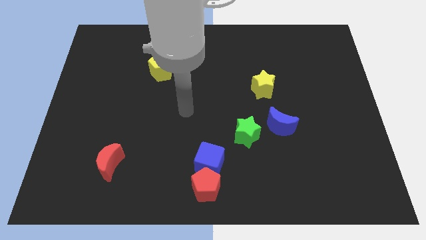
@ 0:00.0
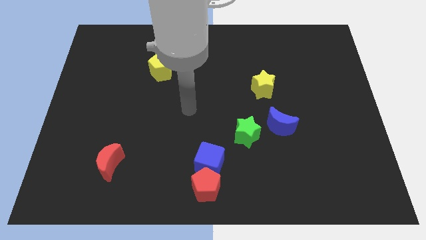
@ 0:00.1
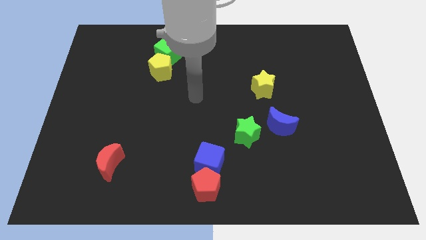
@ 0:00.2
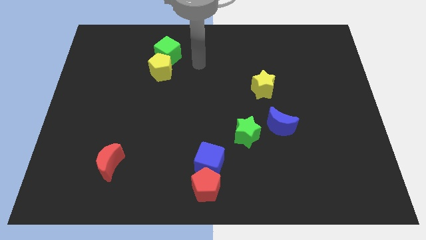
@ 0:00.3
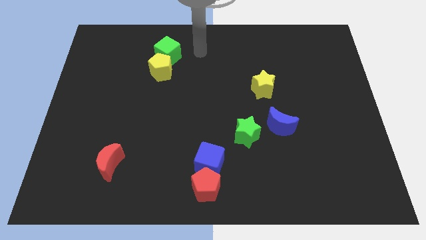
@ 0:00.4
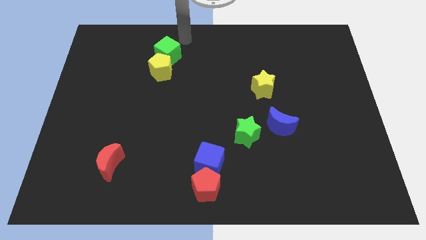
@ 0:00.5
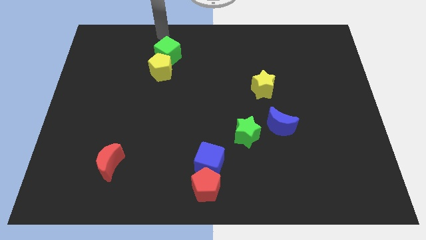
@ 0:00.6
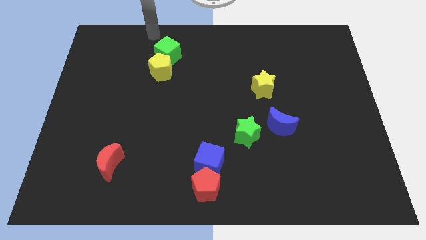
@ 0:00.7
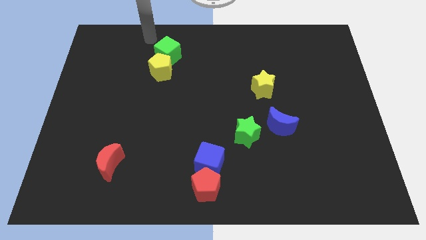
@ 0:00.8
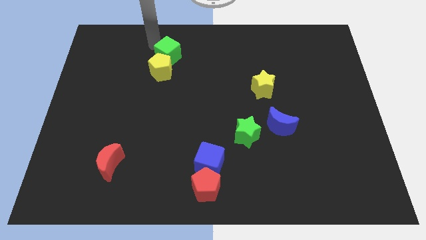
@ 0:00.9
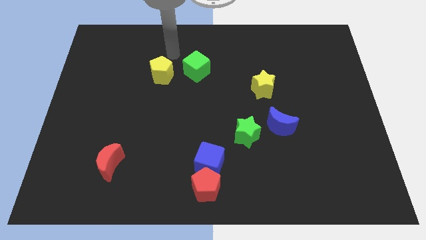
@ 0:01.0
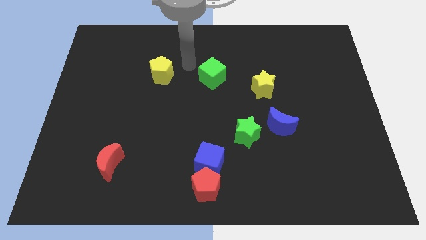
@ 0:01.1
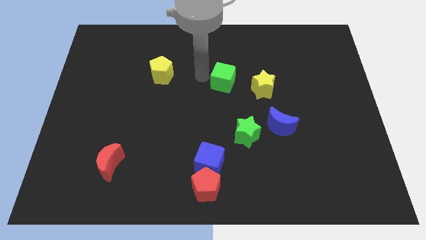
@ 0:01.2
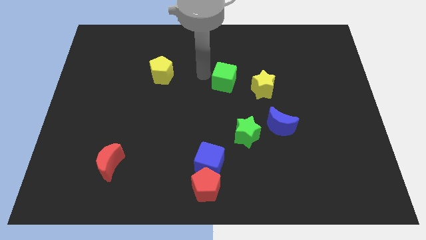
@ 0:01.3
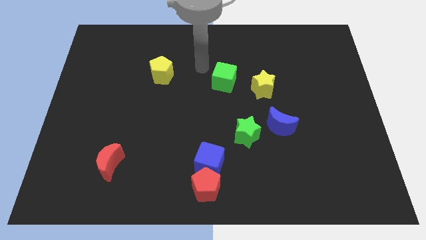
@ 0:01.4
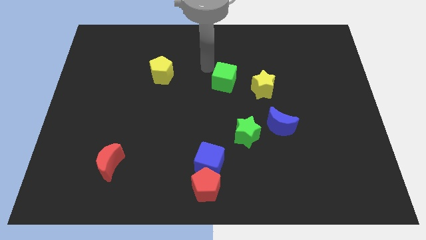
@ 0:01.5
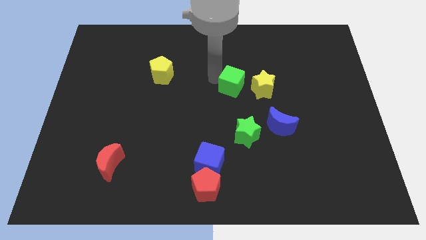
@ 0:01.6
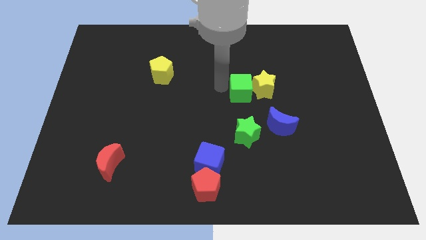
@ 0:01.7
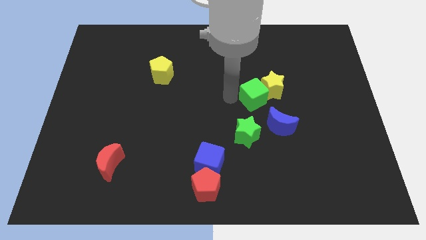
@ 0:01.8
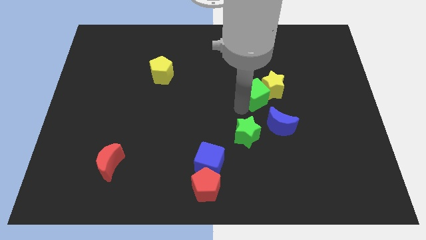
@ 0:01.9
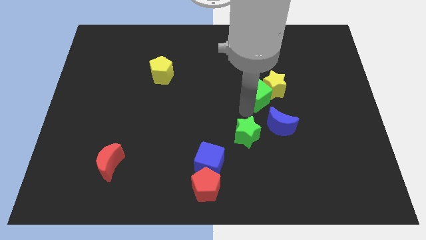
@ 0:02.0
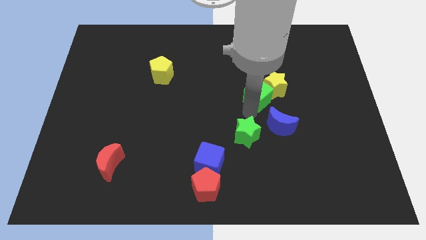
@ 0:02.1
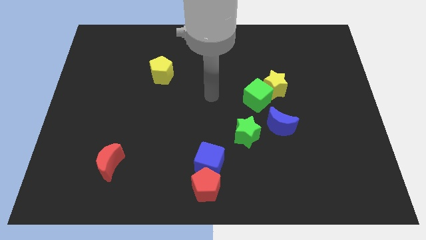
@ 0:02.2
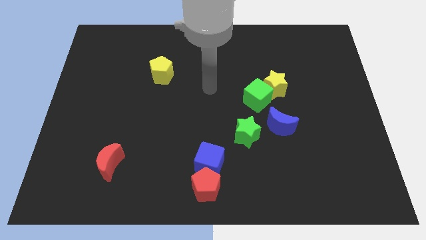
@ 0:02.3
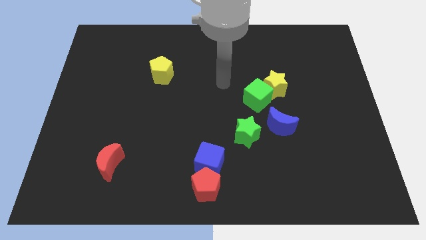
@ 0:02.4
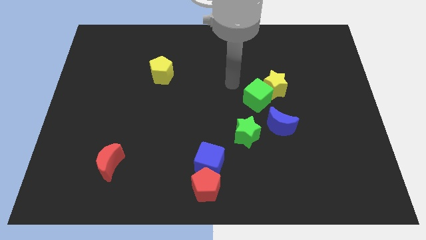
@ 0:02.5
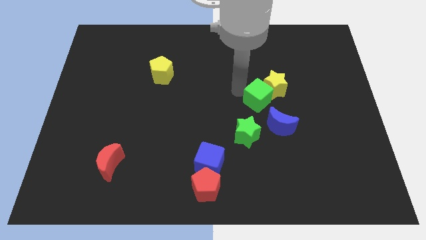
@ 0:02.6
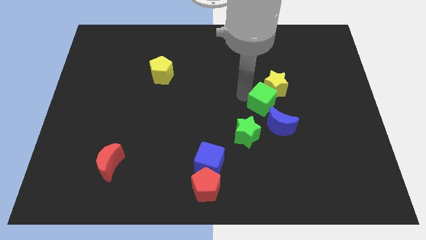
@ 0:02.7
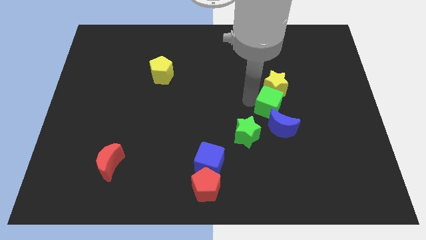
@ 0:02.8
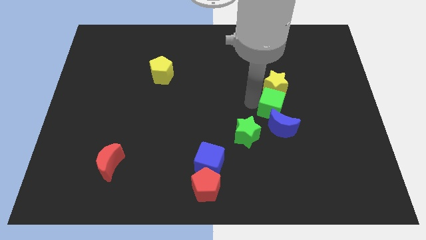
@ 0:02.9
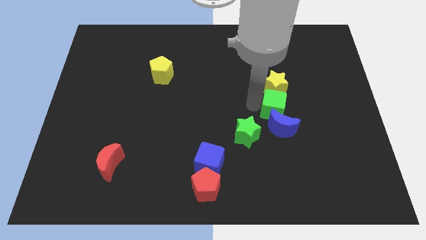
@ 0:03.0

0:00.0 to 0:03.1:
put the green cube next to the blue moon

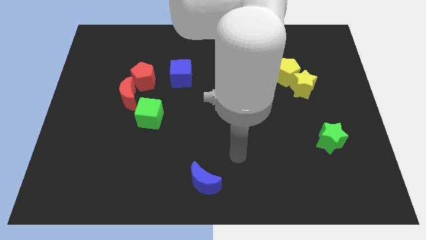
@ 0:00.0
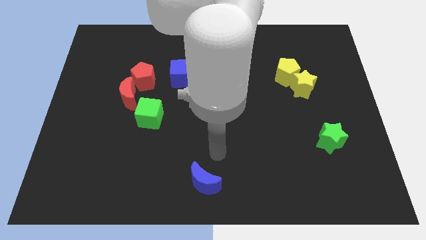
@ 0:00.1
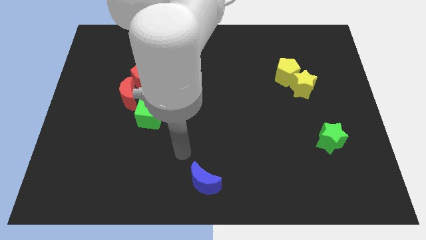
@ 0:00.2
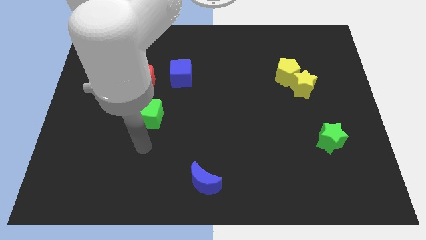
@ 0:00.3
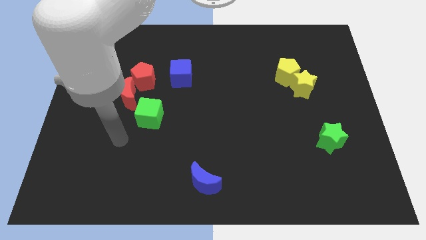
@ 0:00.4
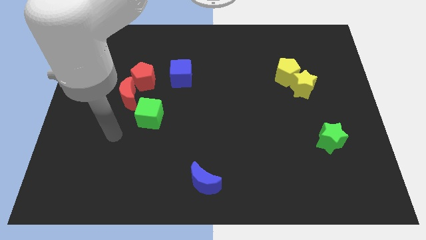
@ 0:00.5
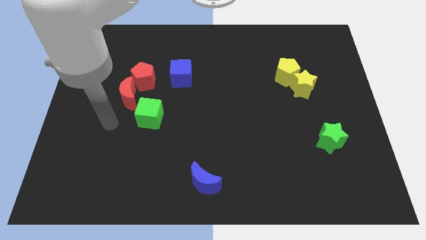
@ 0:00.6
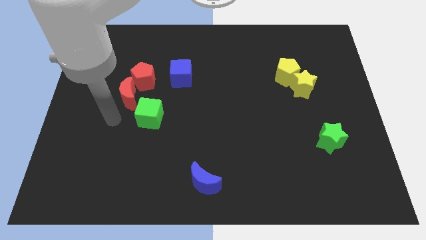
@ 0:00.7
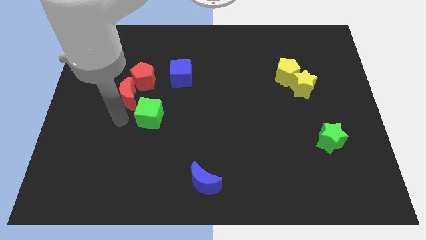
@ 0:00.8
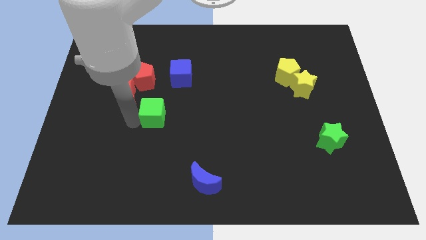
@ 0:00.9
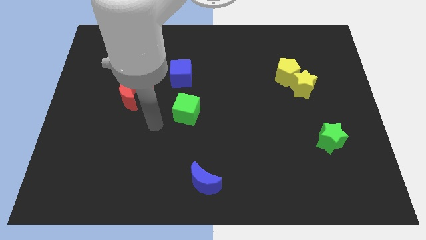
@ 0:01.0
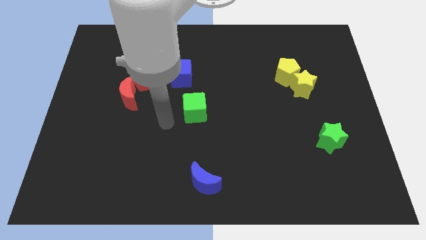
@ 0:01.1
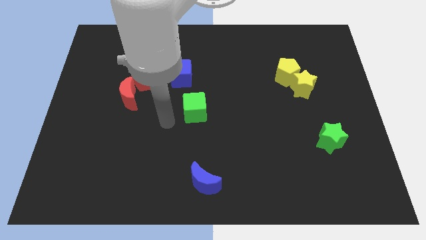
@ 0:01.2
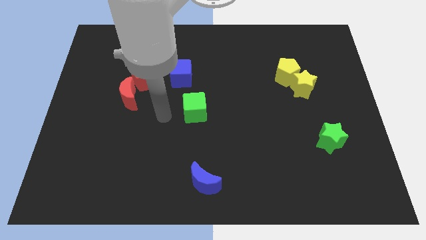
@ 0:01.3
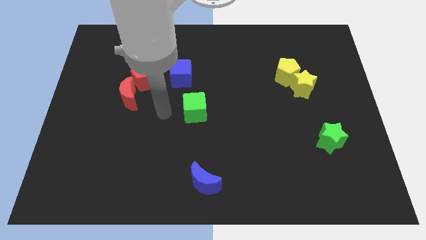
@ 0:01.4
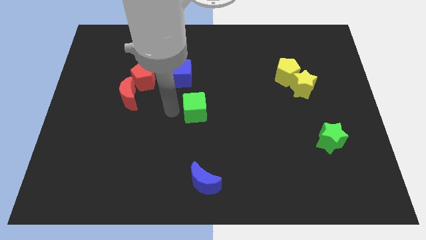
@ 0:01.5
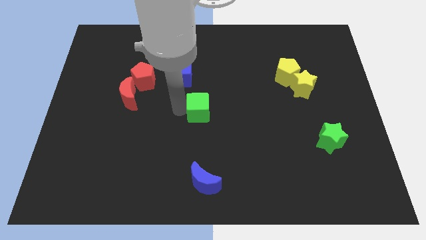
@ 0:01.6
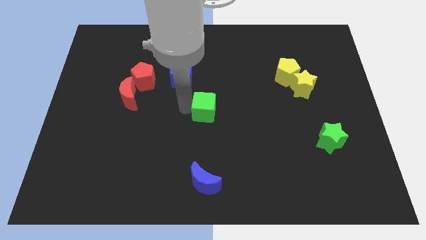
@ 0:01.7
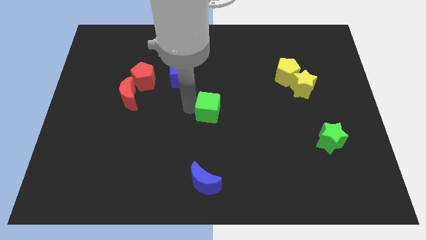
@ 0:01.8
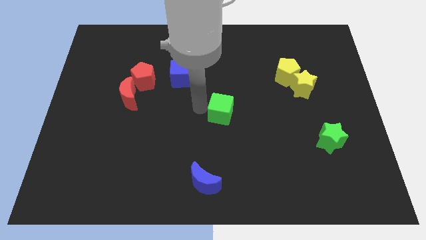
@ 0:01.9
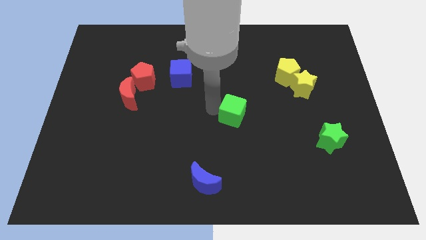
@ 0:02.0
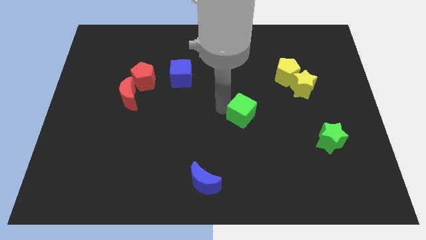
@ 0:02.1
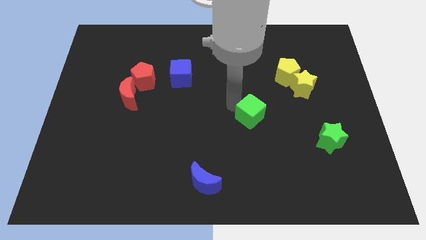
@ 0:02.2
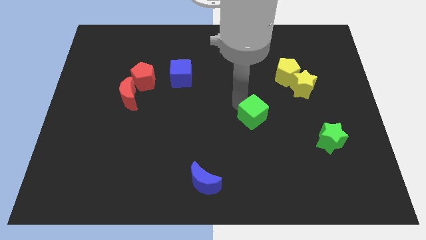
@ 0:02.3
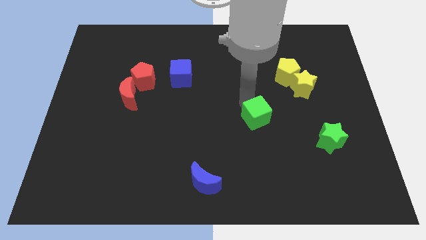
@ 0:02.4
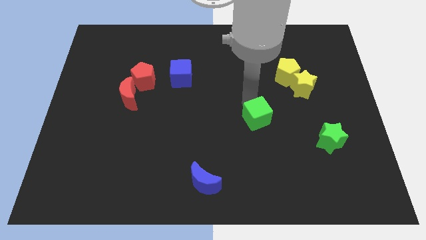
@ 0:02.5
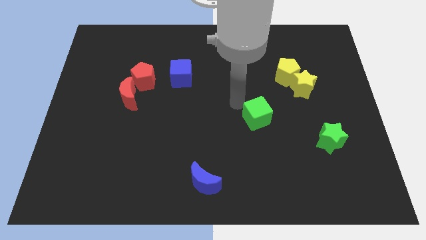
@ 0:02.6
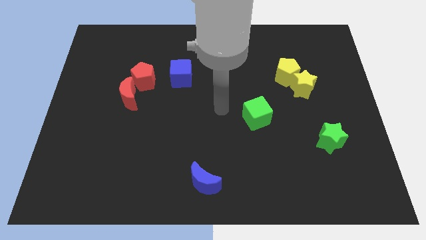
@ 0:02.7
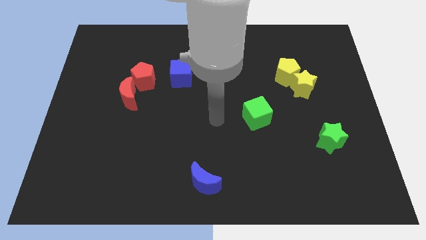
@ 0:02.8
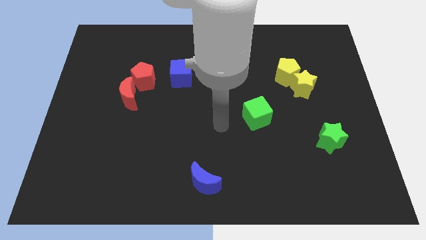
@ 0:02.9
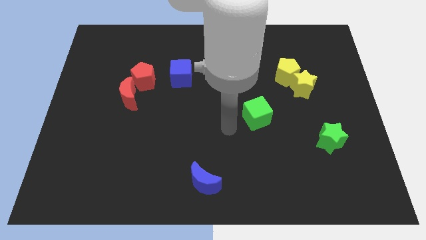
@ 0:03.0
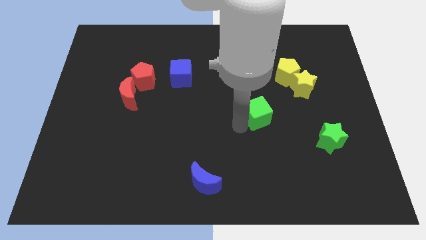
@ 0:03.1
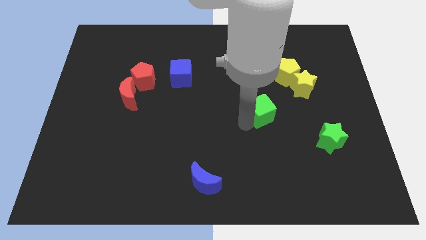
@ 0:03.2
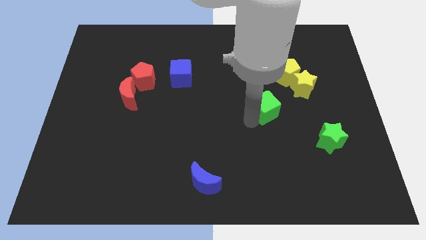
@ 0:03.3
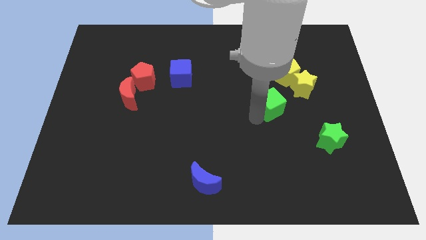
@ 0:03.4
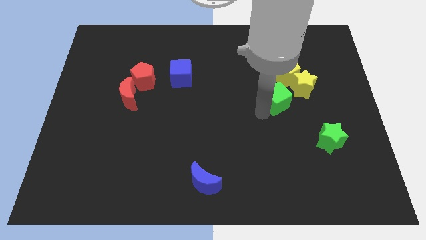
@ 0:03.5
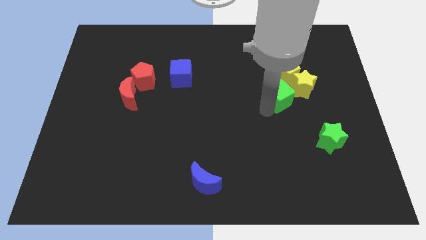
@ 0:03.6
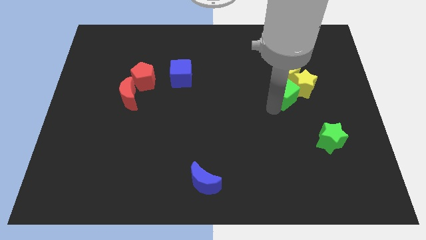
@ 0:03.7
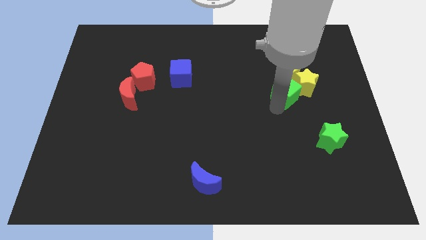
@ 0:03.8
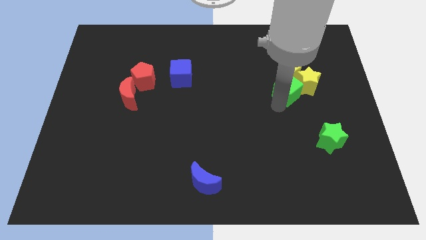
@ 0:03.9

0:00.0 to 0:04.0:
move the green cube close to the yellow star

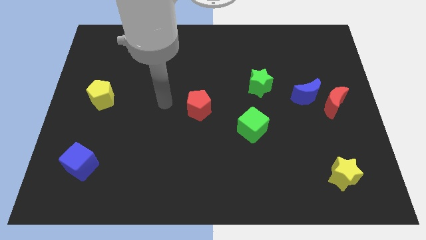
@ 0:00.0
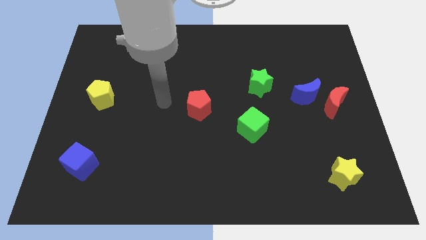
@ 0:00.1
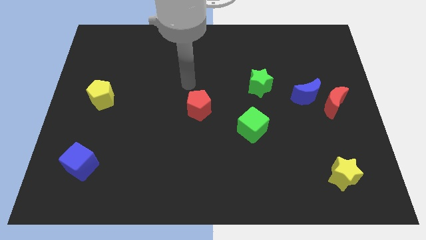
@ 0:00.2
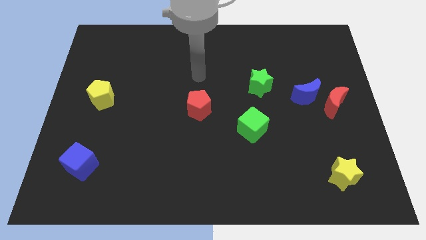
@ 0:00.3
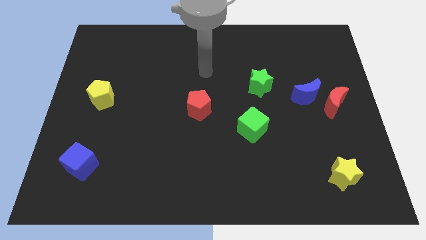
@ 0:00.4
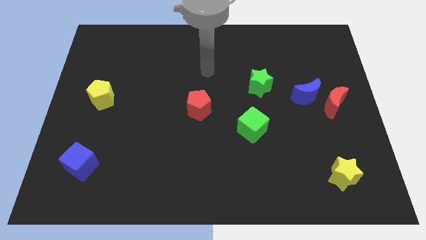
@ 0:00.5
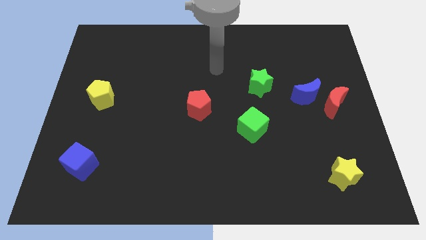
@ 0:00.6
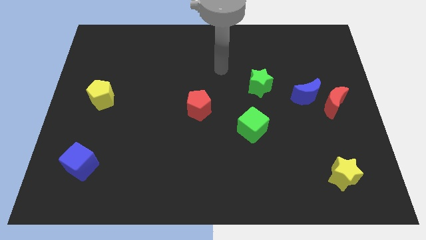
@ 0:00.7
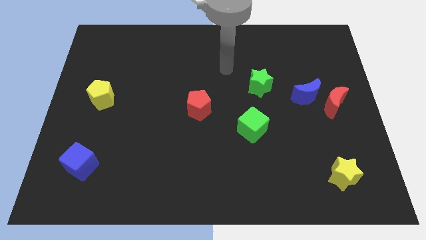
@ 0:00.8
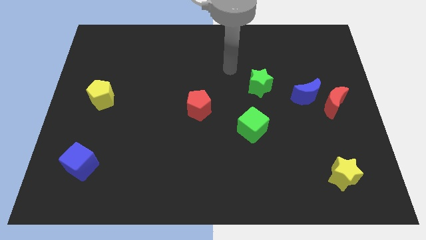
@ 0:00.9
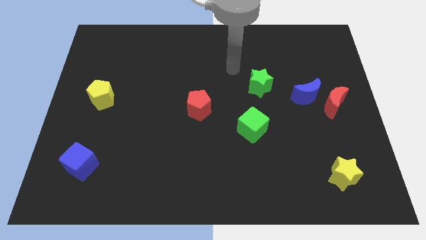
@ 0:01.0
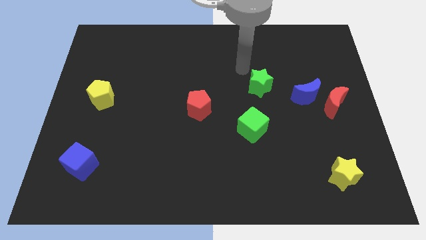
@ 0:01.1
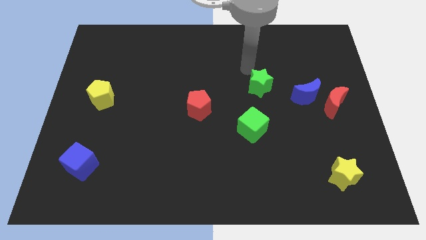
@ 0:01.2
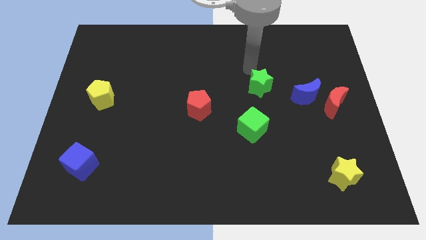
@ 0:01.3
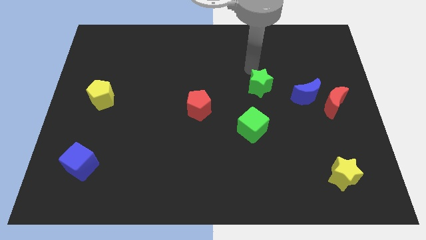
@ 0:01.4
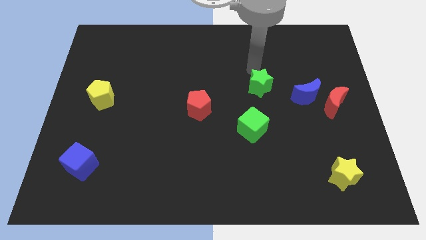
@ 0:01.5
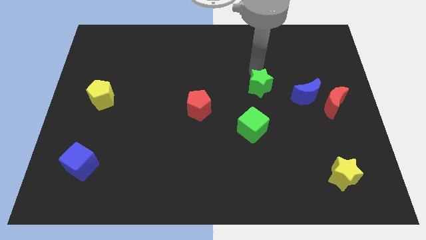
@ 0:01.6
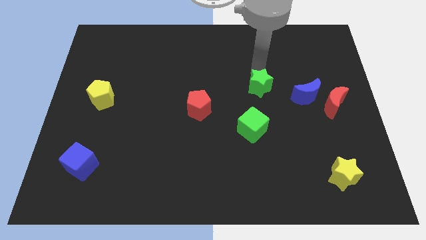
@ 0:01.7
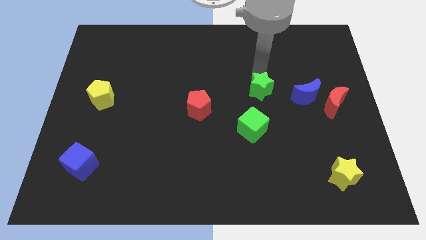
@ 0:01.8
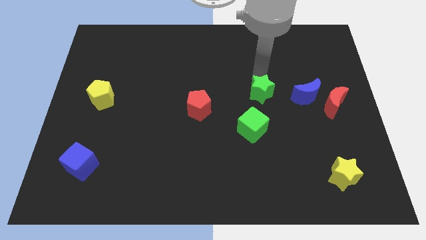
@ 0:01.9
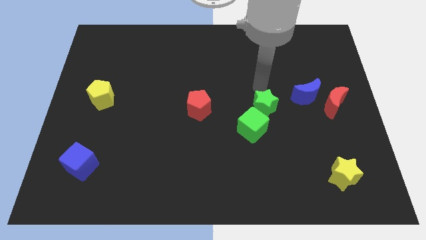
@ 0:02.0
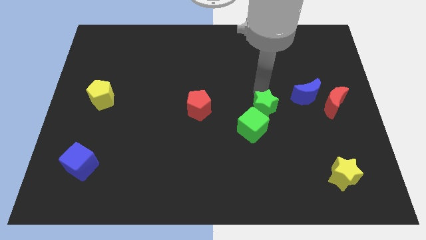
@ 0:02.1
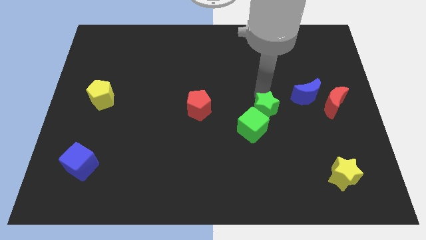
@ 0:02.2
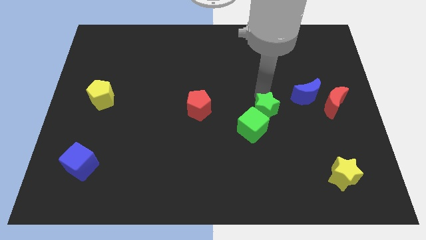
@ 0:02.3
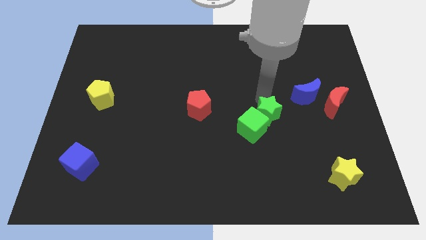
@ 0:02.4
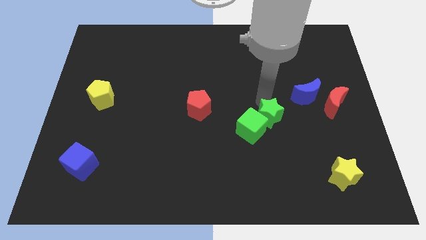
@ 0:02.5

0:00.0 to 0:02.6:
move the green star next to the green cube
